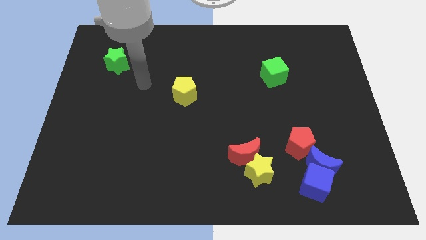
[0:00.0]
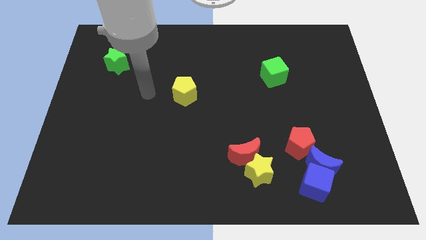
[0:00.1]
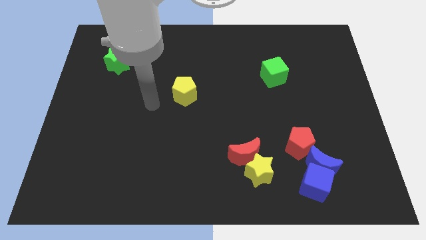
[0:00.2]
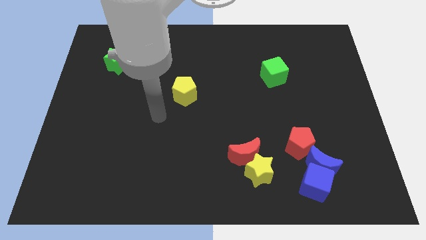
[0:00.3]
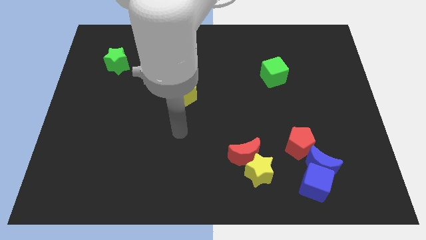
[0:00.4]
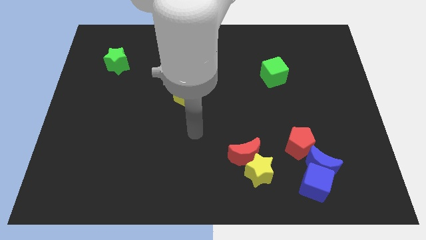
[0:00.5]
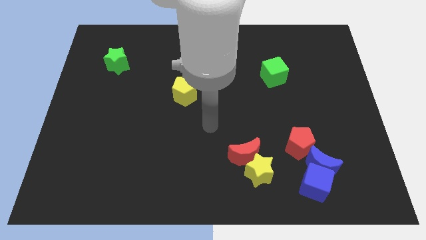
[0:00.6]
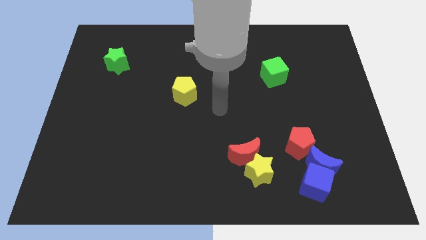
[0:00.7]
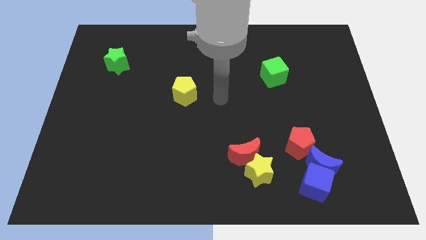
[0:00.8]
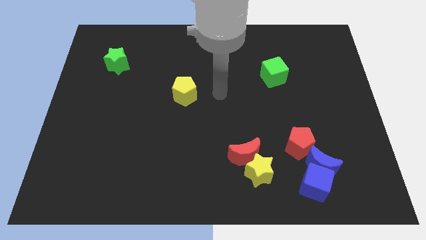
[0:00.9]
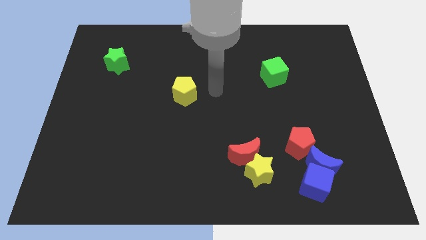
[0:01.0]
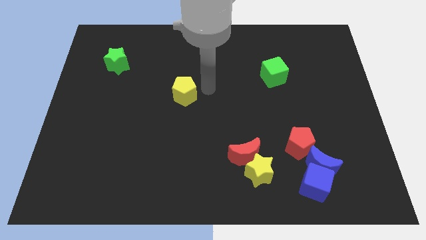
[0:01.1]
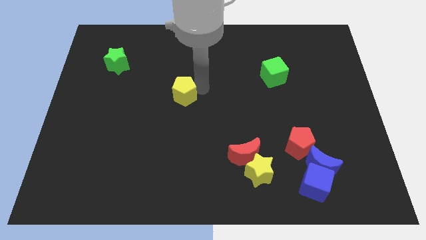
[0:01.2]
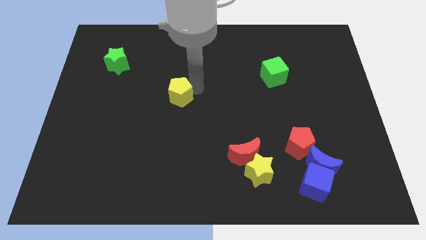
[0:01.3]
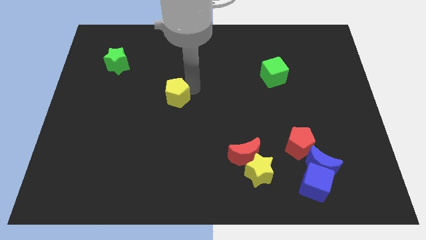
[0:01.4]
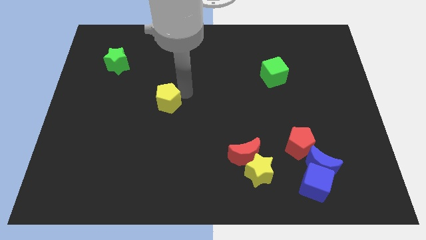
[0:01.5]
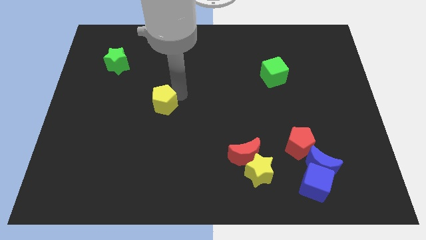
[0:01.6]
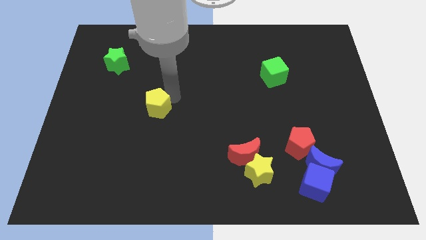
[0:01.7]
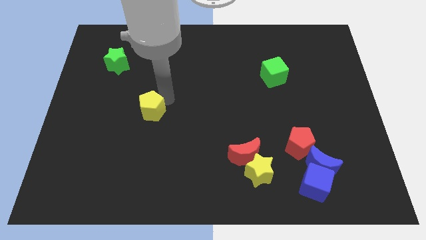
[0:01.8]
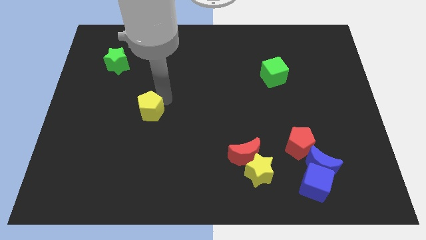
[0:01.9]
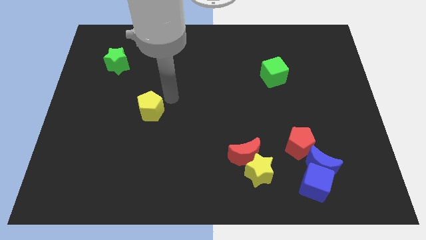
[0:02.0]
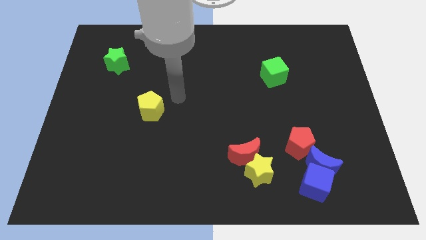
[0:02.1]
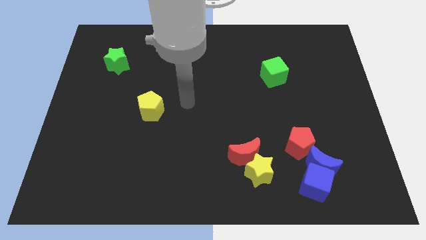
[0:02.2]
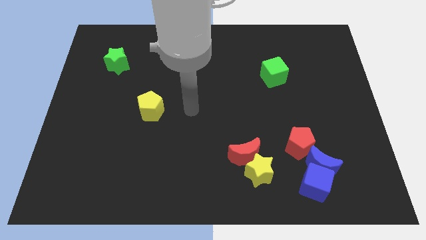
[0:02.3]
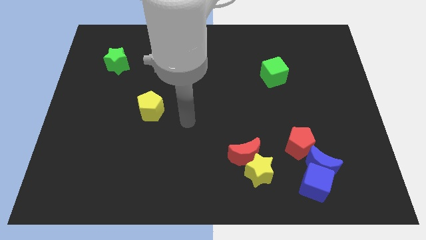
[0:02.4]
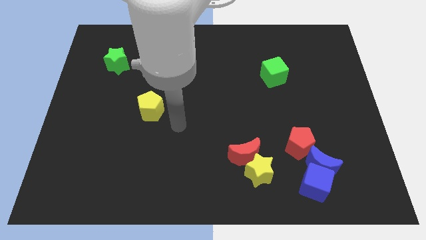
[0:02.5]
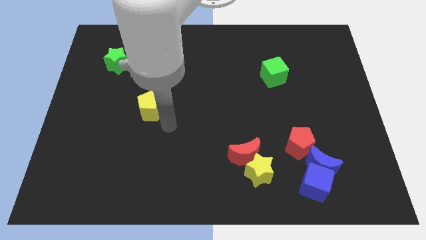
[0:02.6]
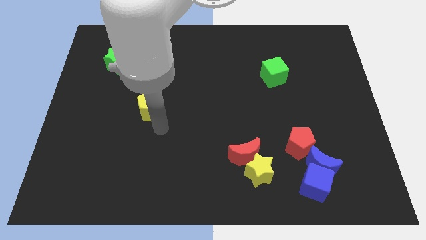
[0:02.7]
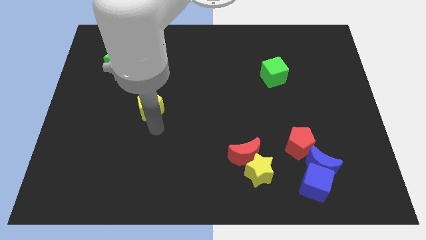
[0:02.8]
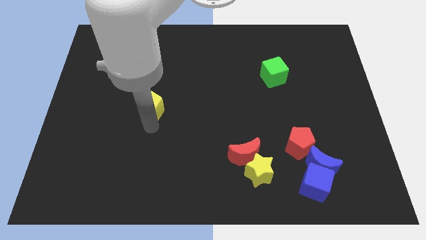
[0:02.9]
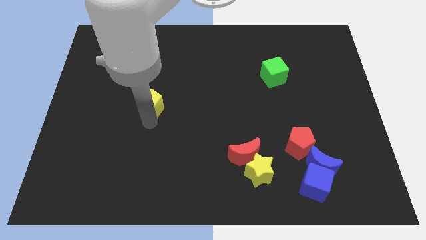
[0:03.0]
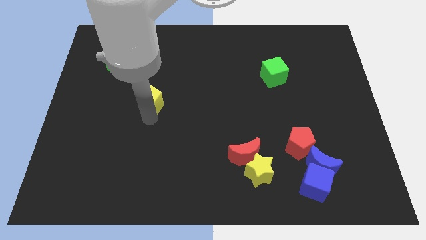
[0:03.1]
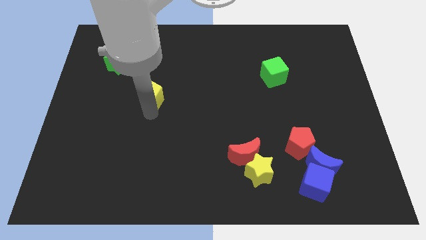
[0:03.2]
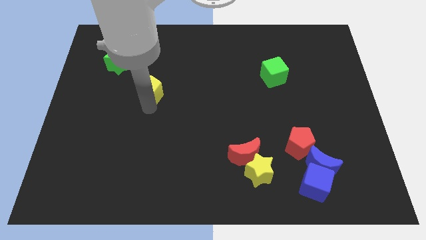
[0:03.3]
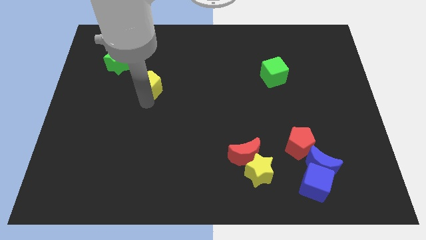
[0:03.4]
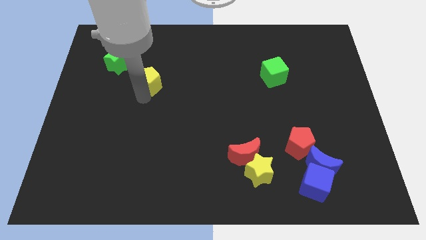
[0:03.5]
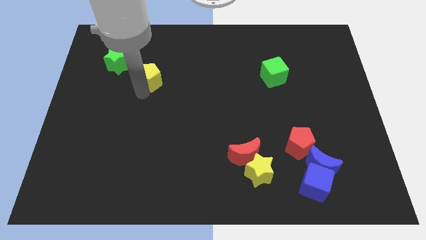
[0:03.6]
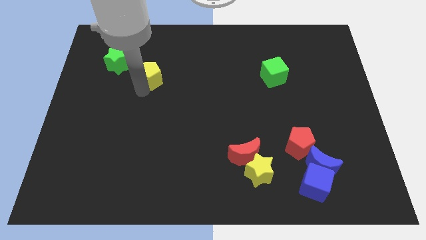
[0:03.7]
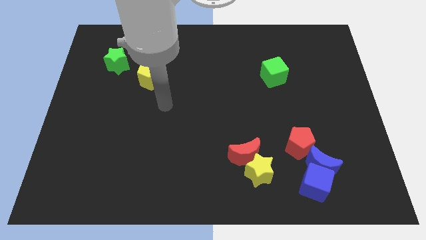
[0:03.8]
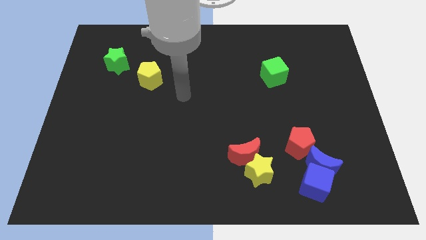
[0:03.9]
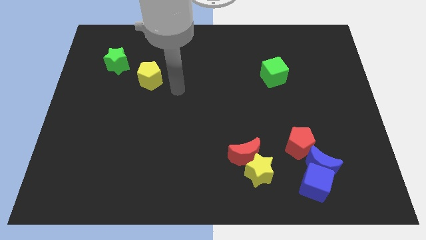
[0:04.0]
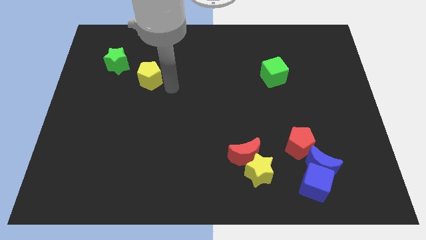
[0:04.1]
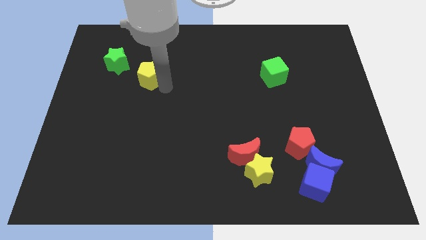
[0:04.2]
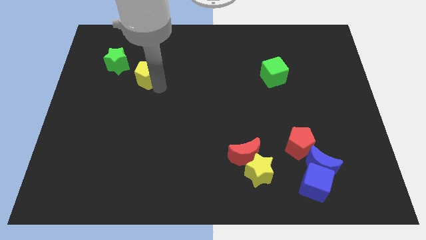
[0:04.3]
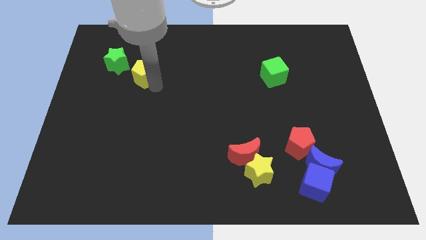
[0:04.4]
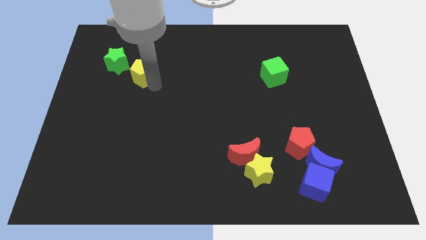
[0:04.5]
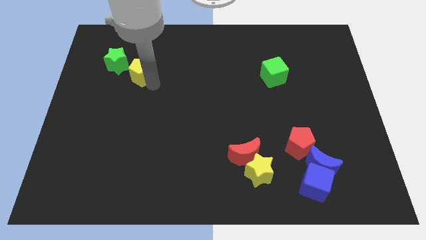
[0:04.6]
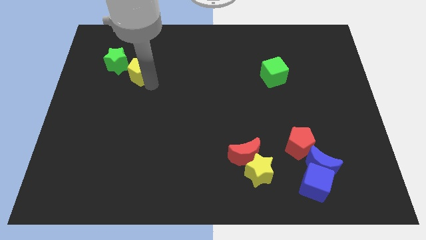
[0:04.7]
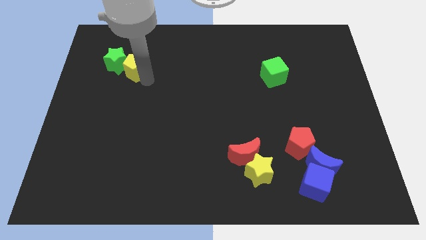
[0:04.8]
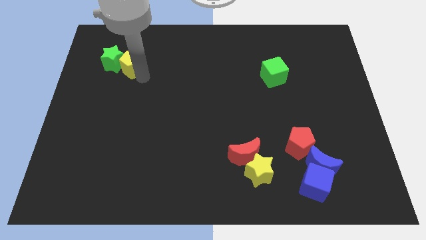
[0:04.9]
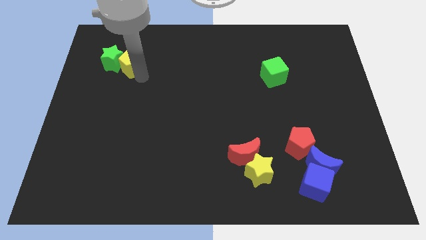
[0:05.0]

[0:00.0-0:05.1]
push the yellow pentagon close to the green star

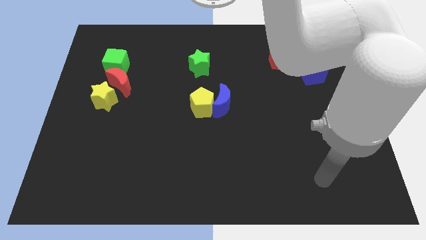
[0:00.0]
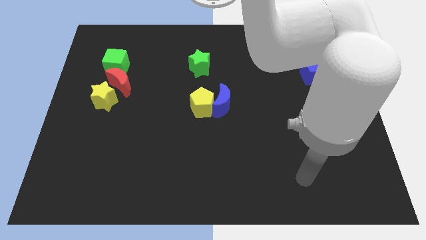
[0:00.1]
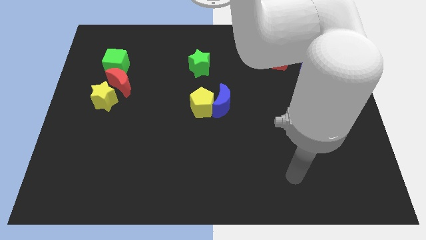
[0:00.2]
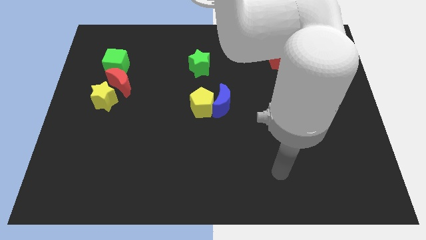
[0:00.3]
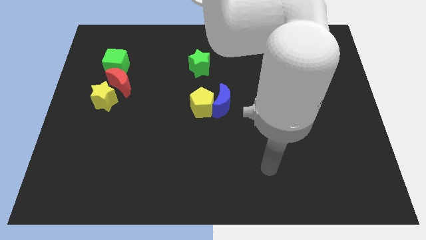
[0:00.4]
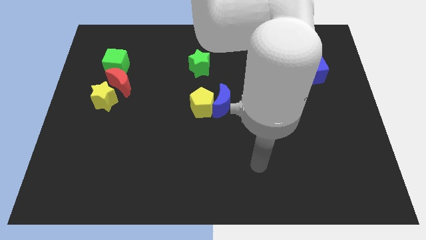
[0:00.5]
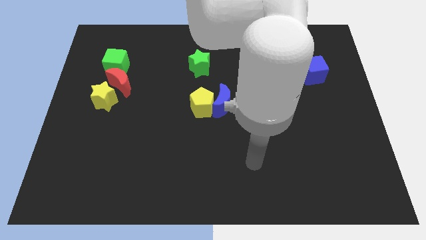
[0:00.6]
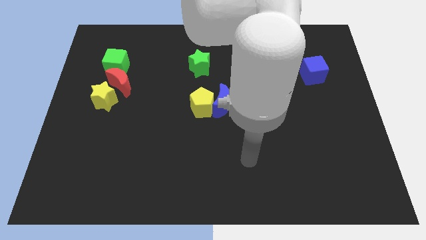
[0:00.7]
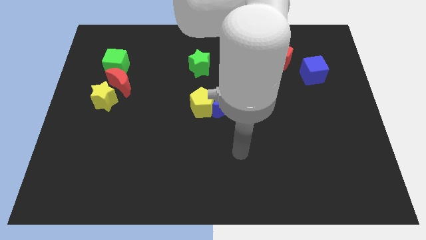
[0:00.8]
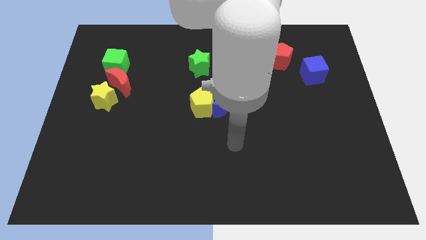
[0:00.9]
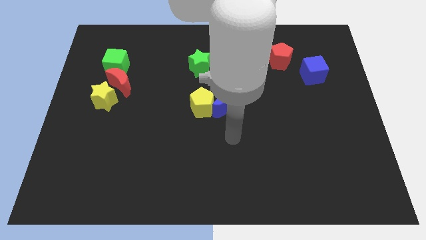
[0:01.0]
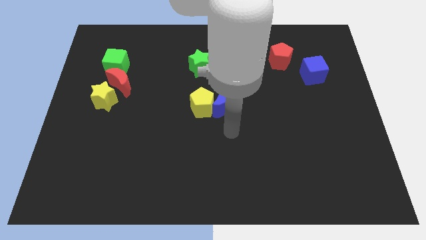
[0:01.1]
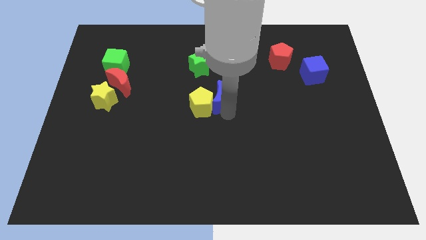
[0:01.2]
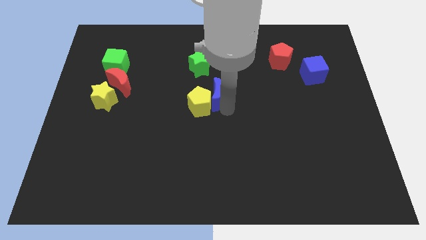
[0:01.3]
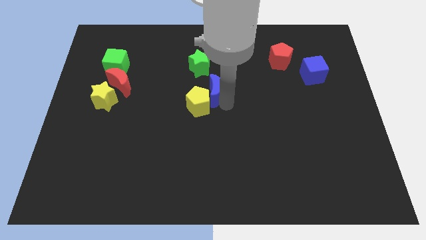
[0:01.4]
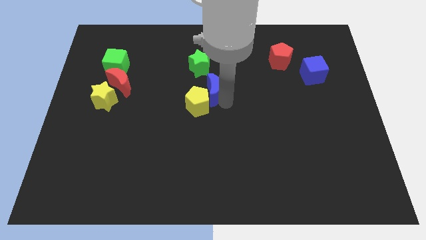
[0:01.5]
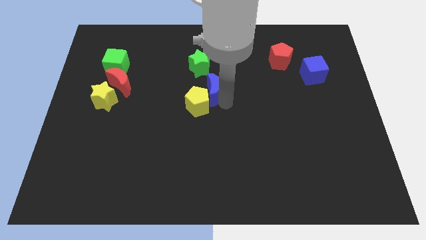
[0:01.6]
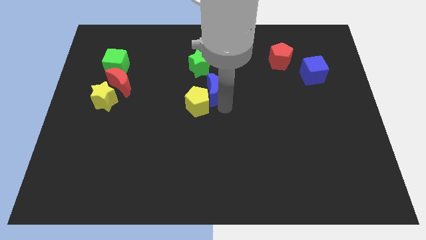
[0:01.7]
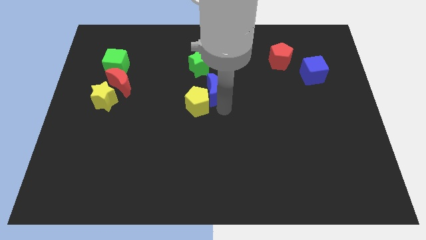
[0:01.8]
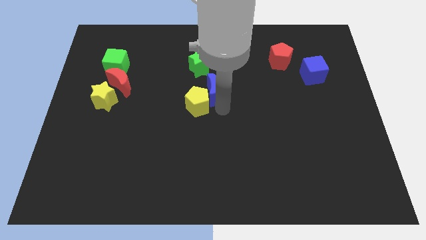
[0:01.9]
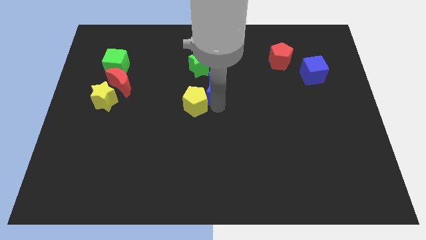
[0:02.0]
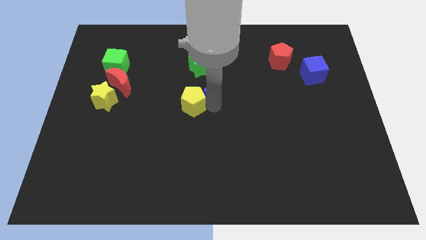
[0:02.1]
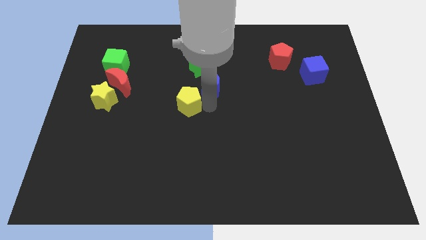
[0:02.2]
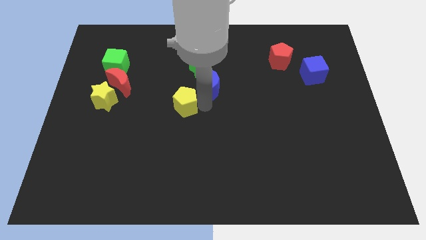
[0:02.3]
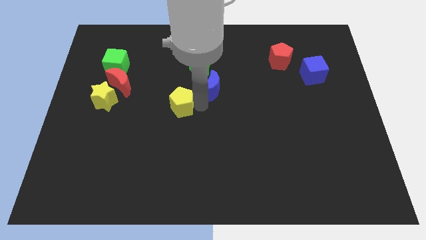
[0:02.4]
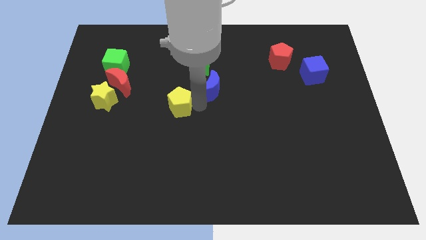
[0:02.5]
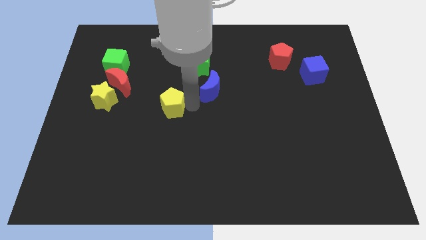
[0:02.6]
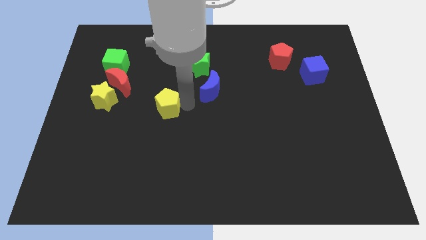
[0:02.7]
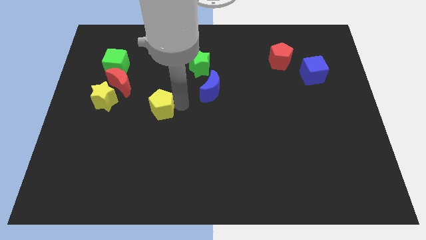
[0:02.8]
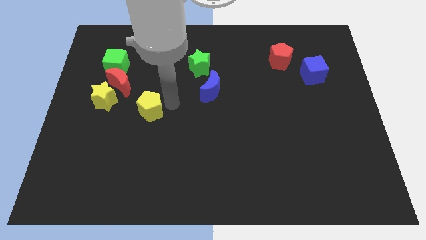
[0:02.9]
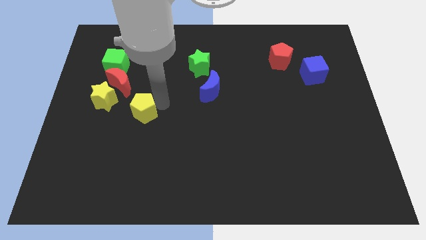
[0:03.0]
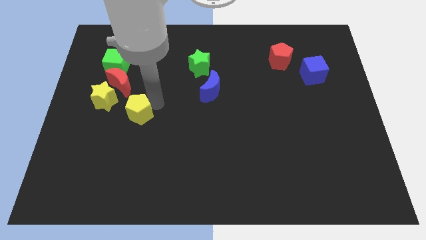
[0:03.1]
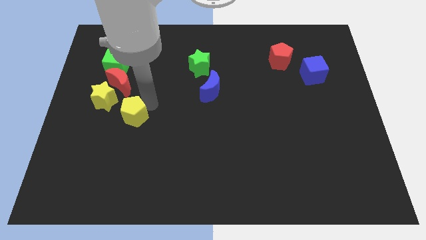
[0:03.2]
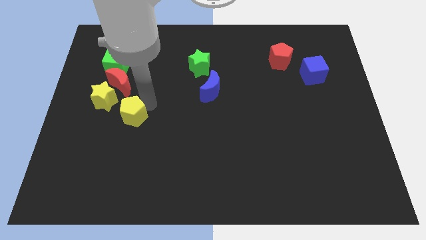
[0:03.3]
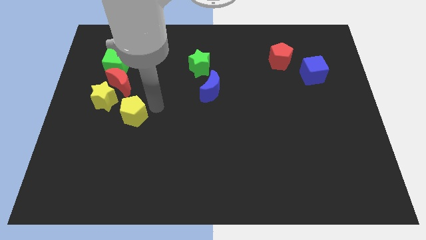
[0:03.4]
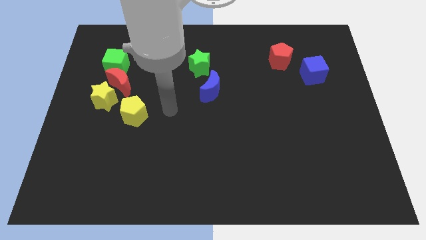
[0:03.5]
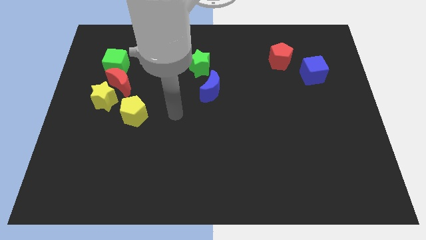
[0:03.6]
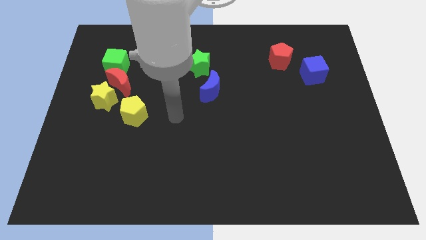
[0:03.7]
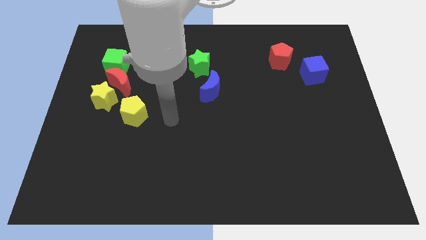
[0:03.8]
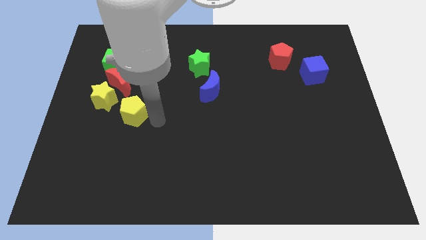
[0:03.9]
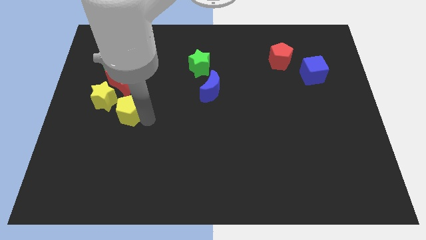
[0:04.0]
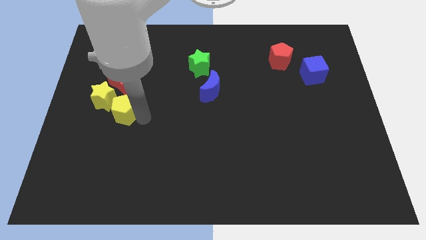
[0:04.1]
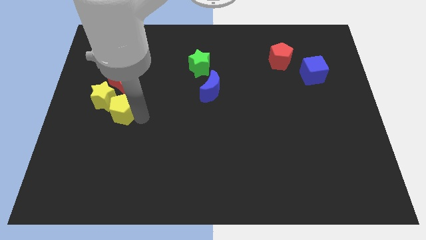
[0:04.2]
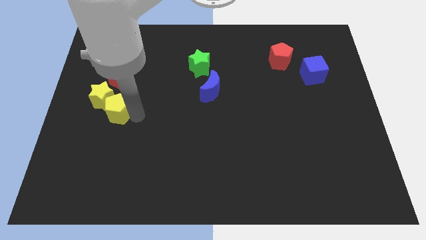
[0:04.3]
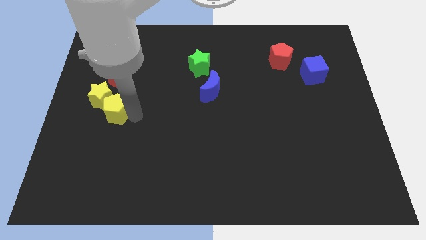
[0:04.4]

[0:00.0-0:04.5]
push the yellow pentagon next to the yellow star
